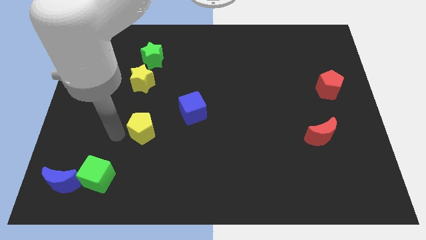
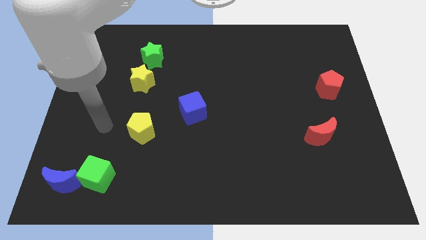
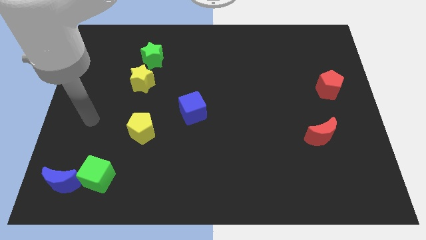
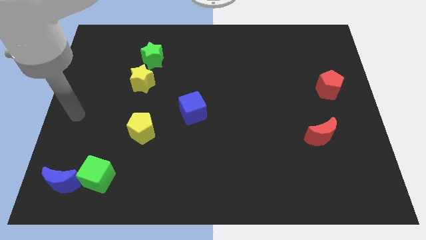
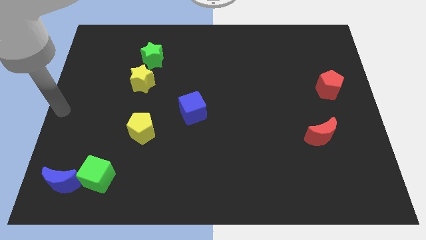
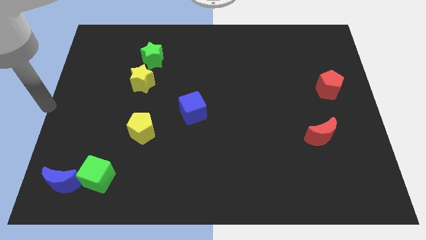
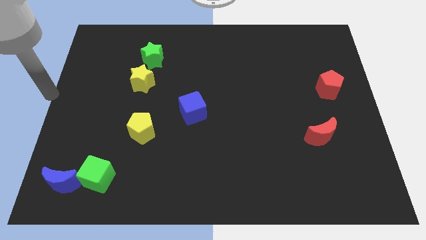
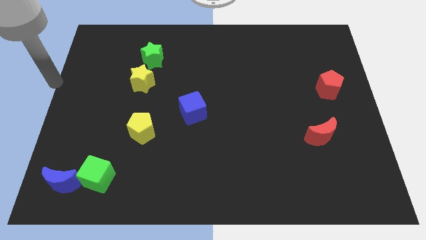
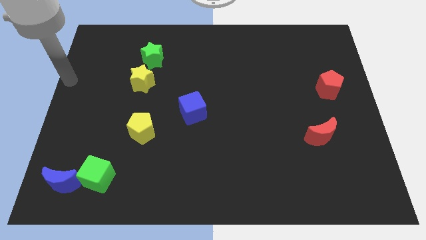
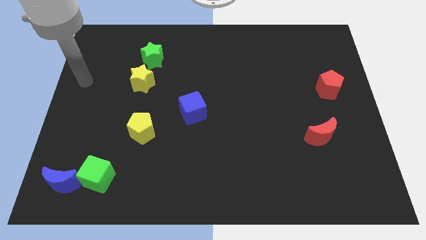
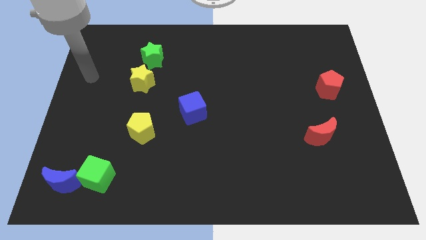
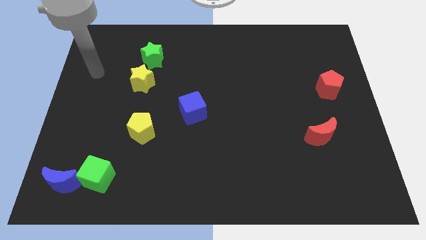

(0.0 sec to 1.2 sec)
move your arm parallel left to the yellow star

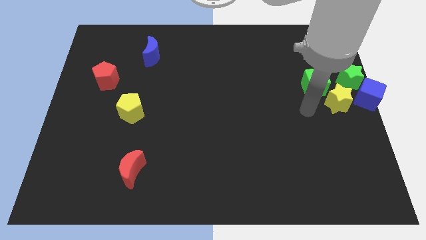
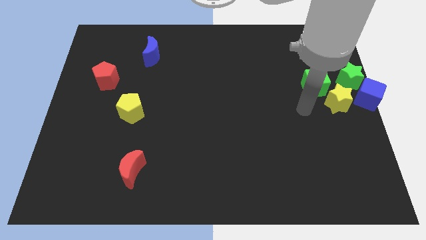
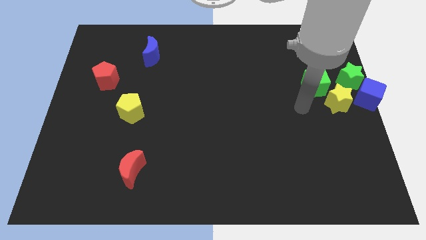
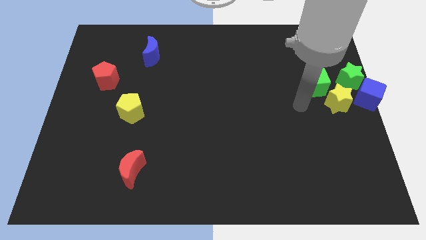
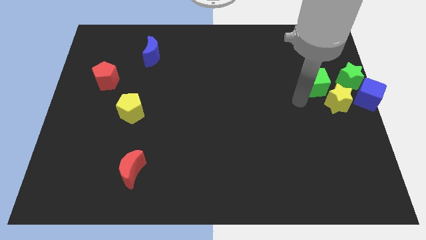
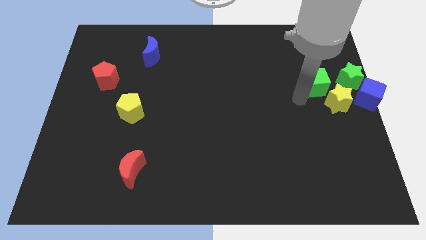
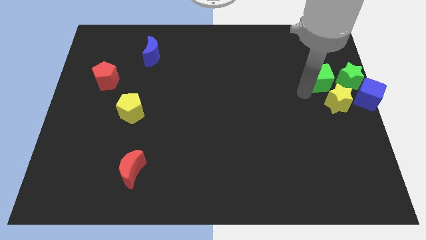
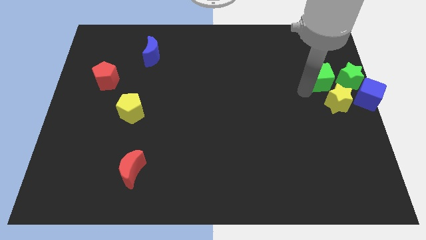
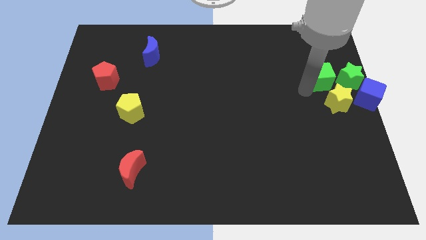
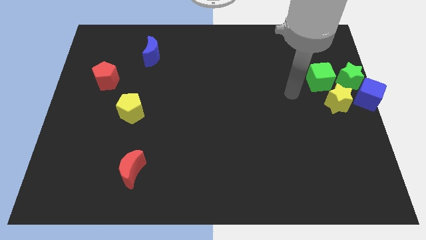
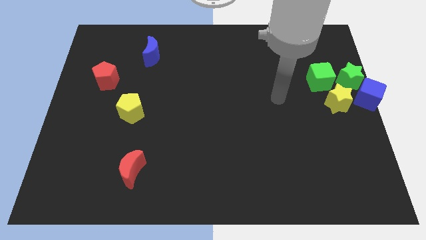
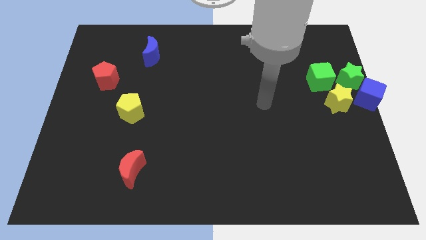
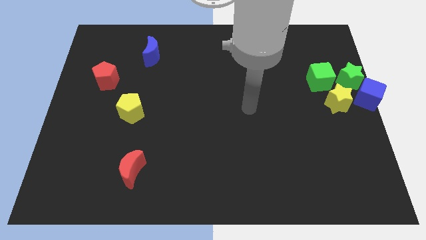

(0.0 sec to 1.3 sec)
slightly push the green cube towards the green star

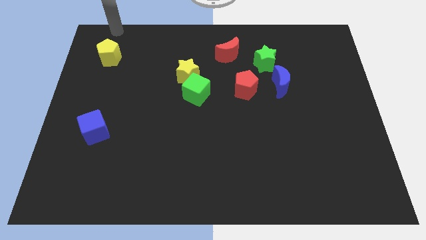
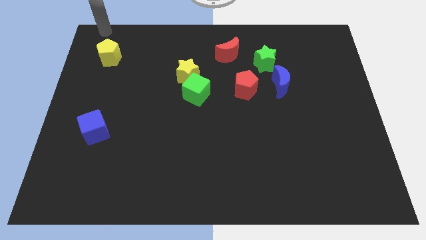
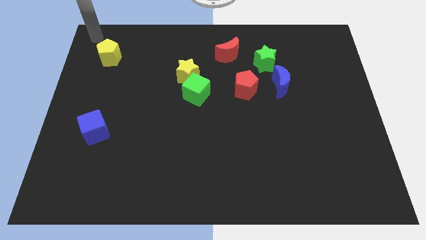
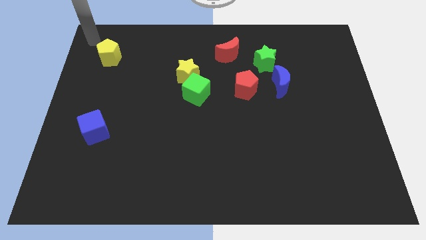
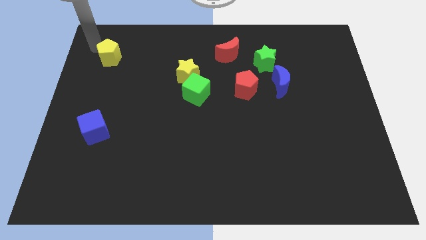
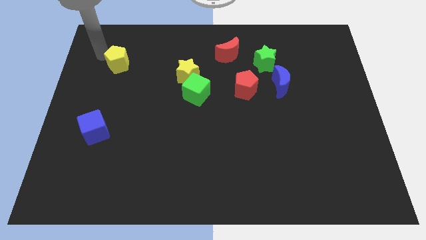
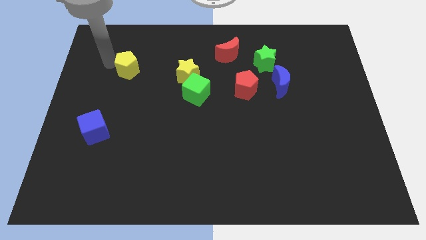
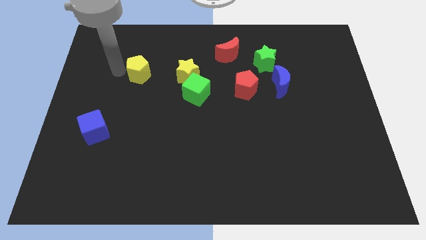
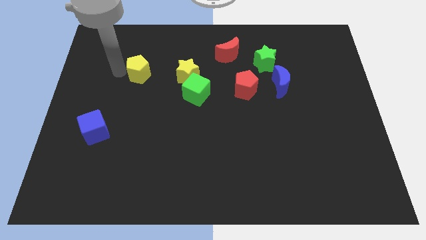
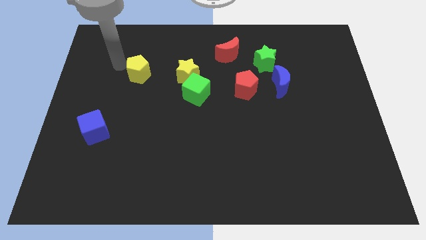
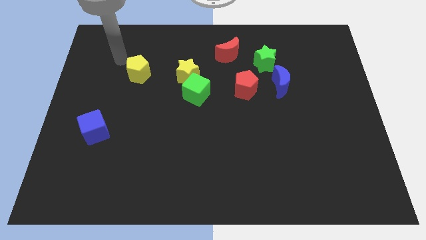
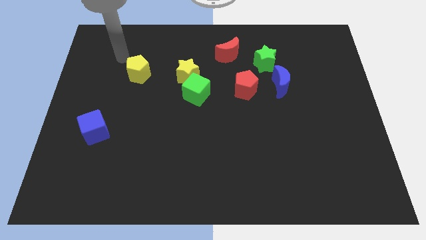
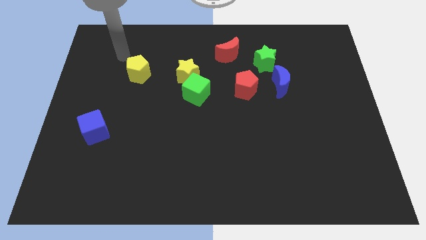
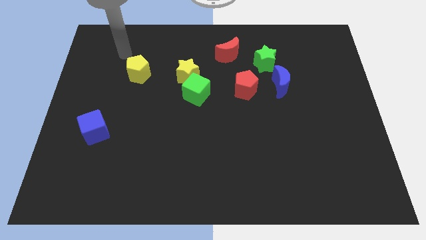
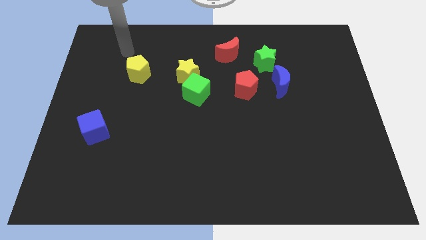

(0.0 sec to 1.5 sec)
push the yellow pentagon to the left of the yellow star

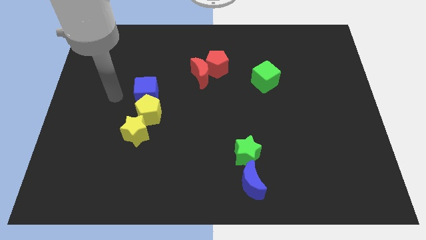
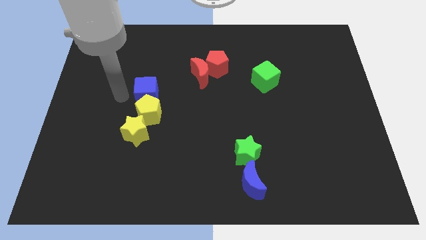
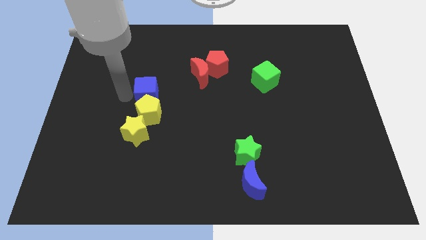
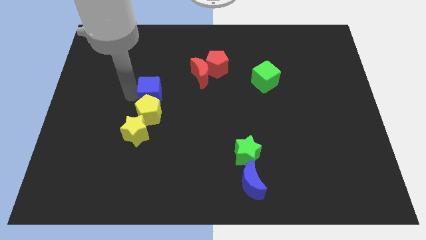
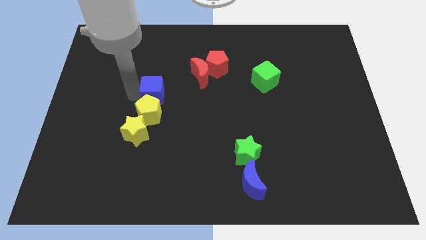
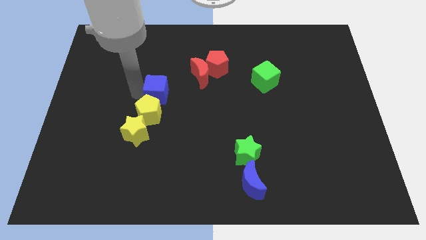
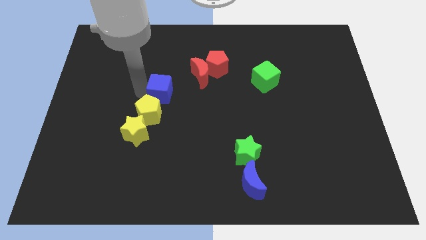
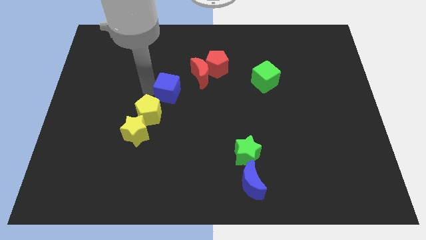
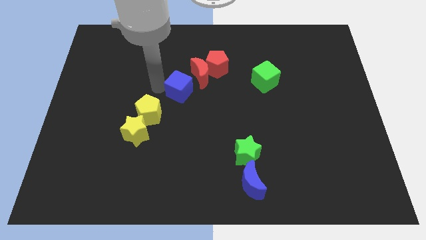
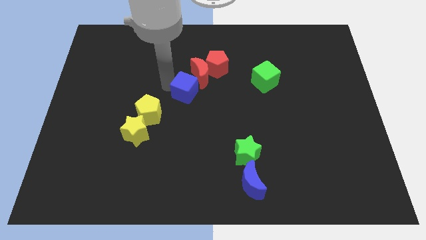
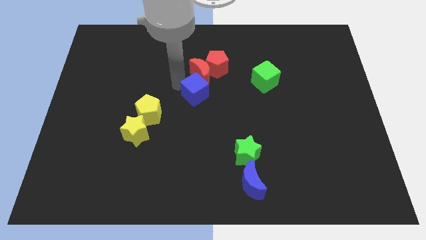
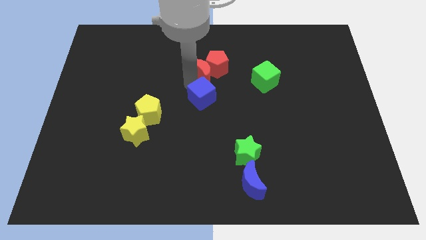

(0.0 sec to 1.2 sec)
push the blue cube into red crescent

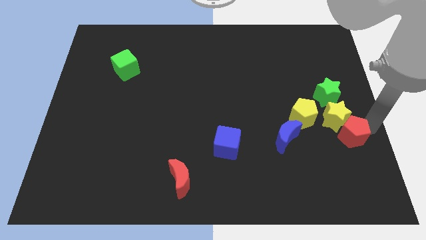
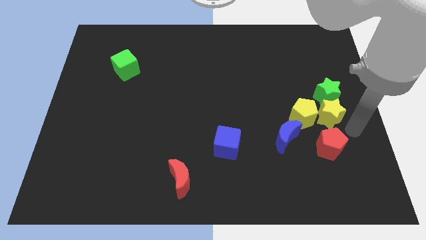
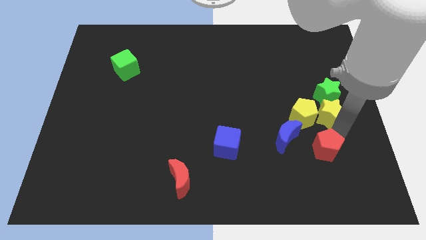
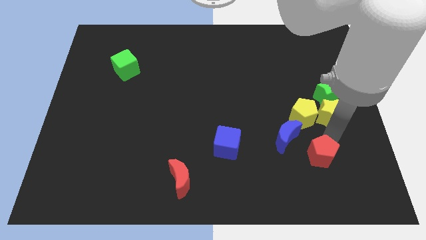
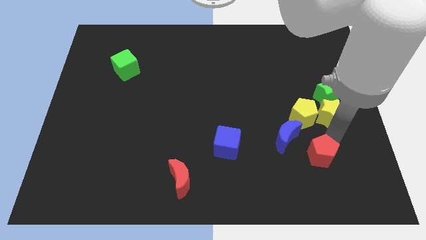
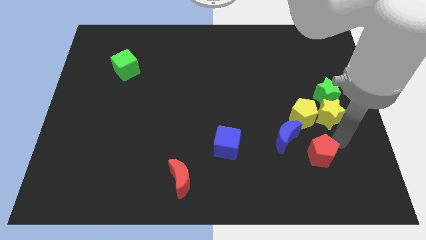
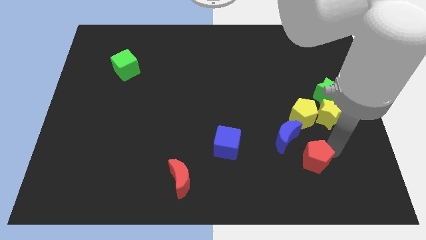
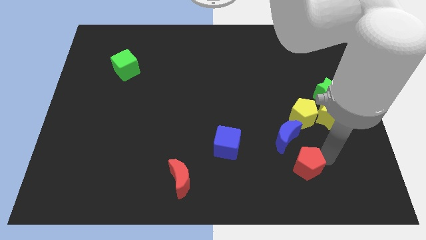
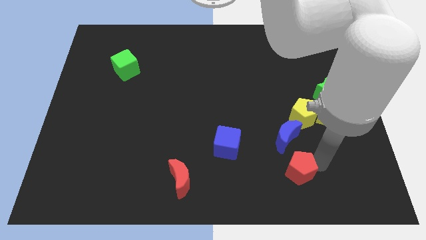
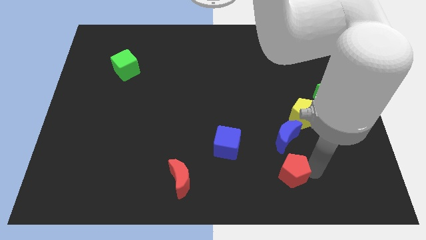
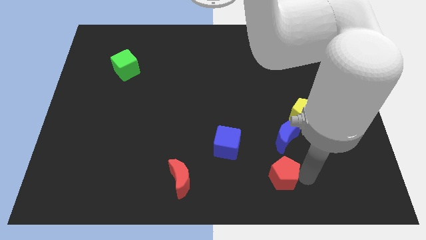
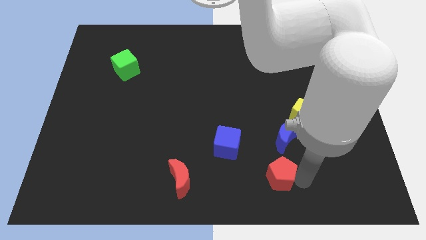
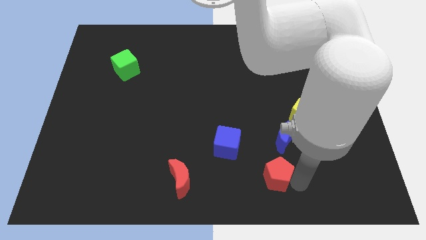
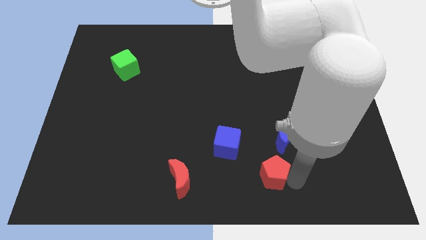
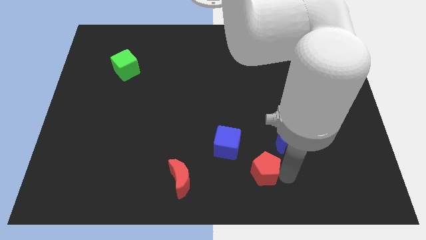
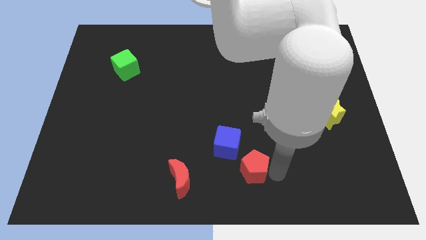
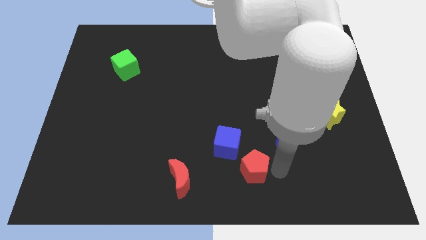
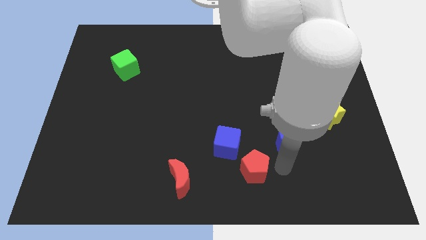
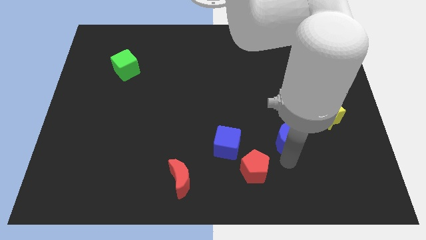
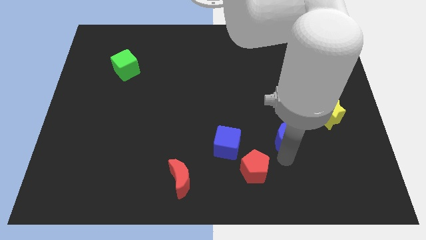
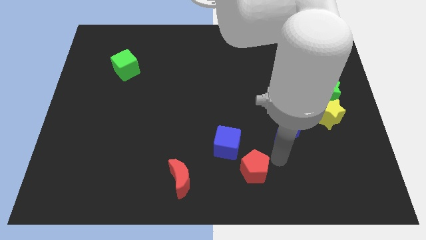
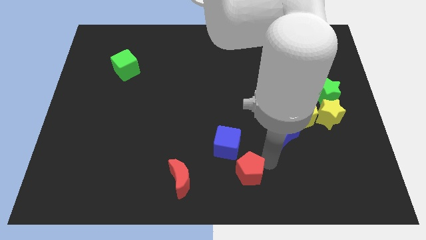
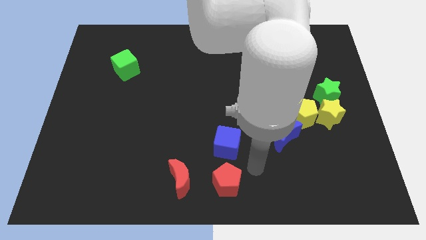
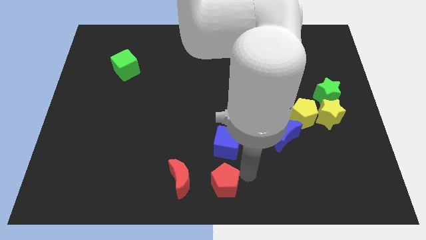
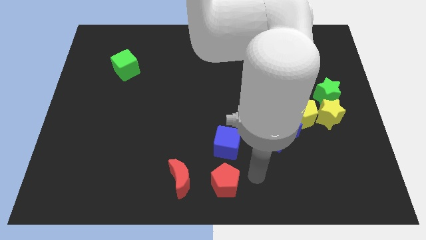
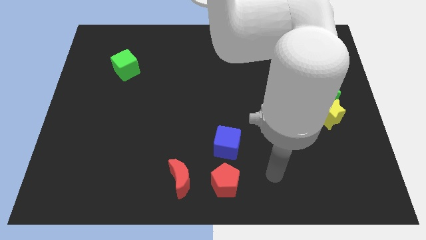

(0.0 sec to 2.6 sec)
push the red pentagon down to the blue cube

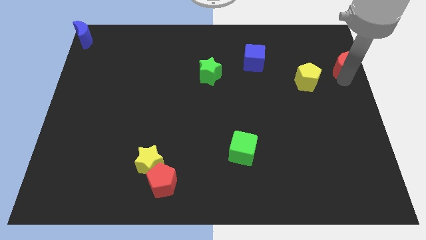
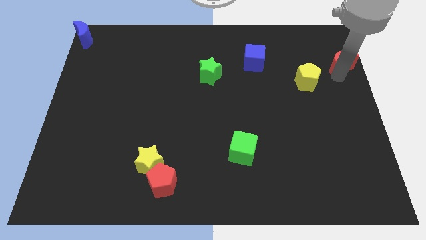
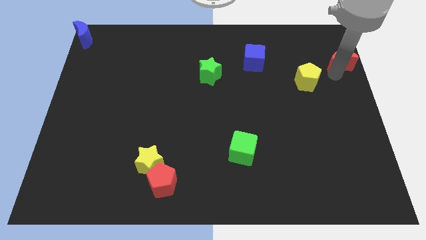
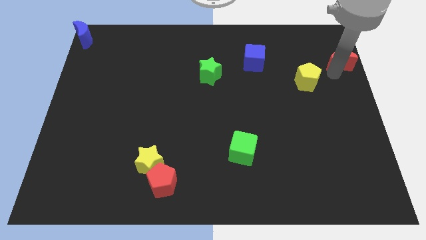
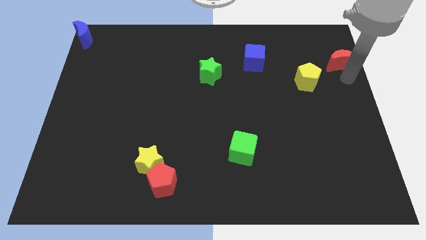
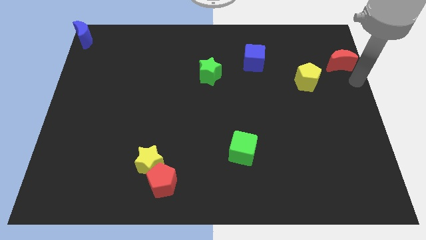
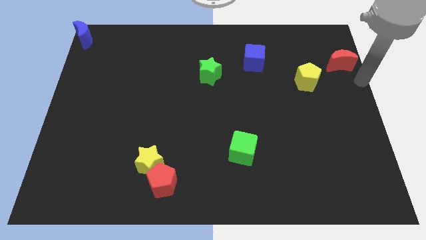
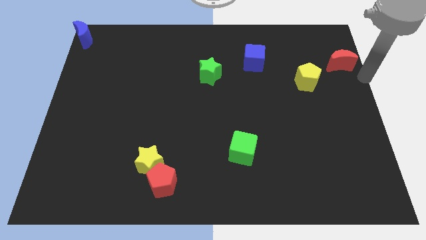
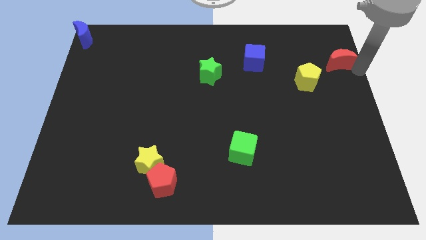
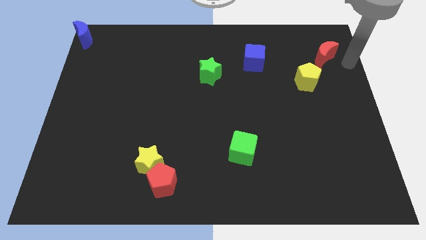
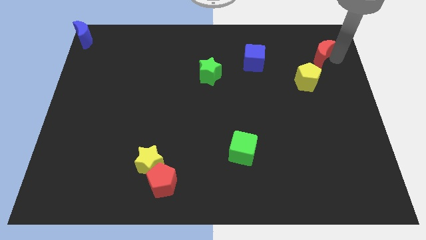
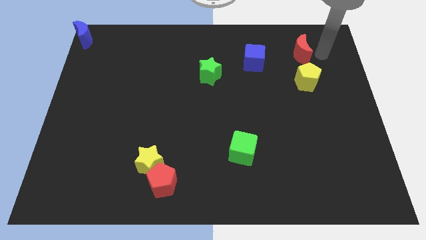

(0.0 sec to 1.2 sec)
place the red moon at the top of yellow pentagon
